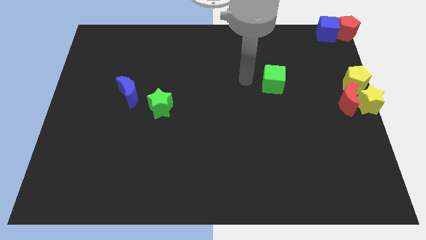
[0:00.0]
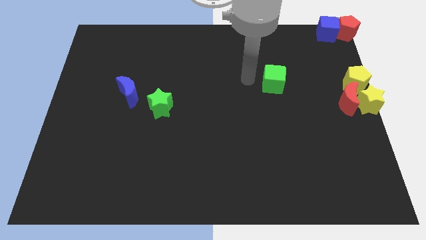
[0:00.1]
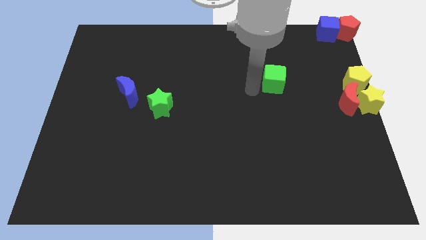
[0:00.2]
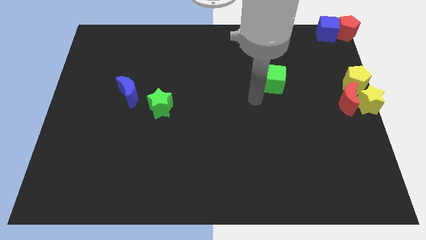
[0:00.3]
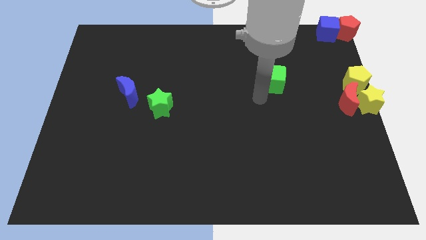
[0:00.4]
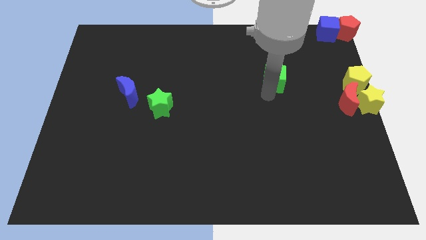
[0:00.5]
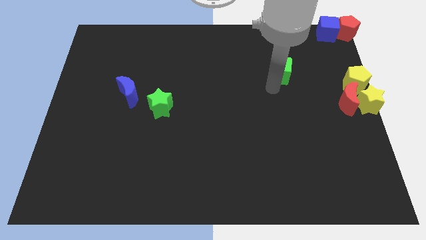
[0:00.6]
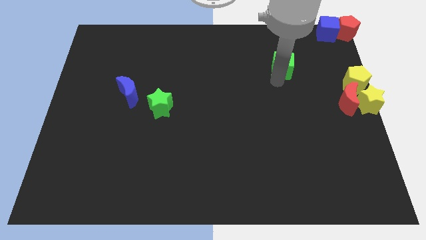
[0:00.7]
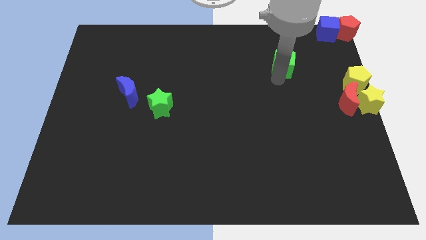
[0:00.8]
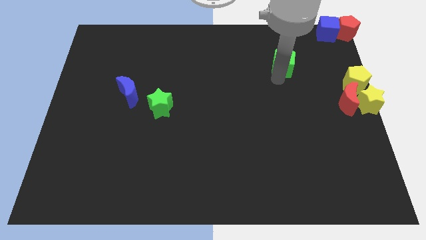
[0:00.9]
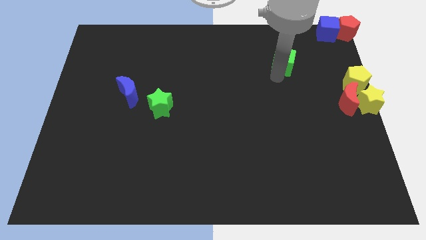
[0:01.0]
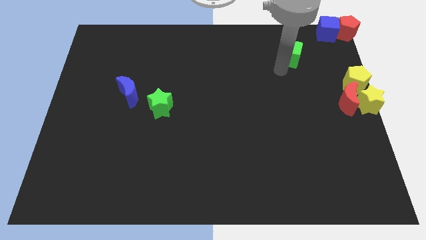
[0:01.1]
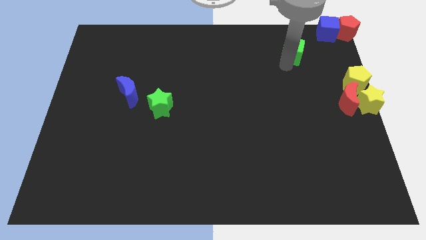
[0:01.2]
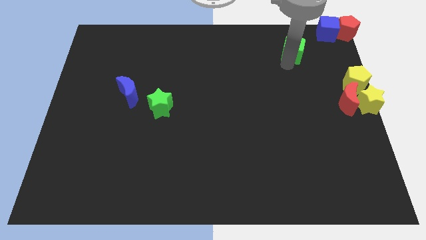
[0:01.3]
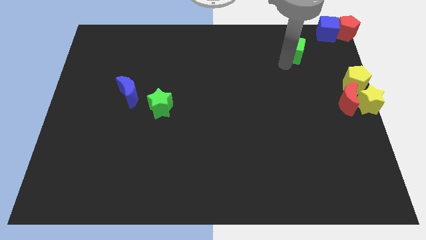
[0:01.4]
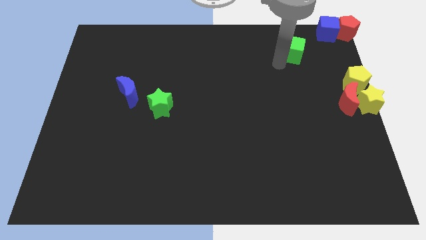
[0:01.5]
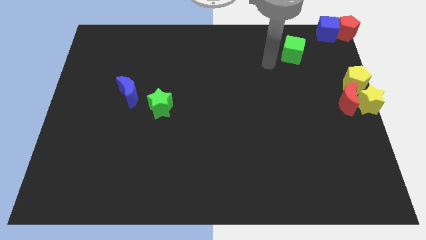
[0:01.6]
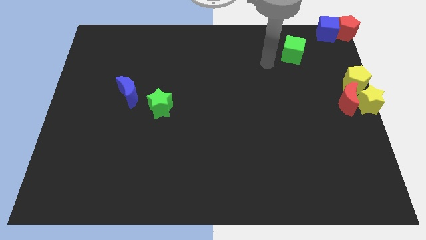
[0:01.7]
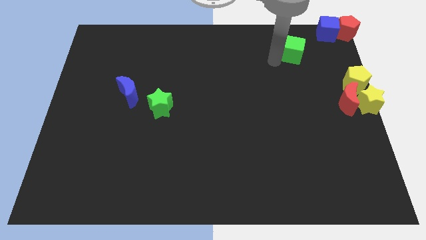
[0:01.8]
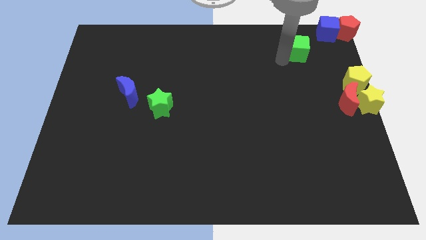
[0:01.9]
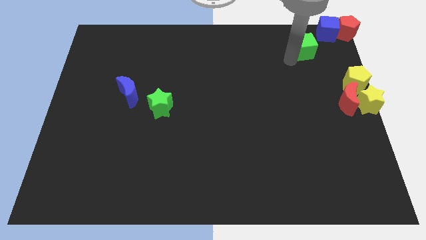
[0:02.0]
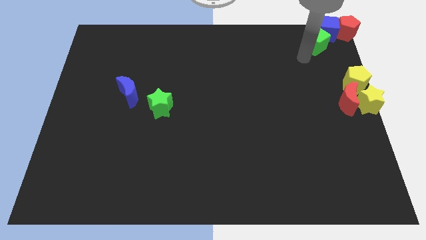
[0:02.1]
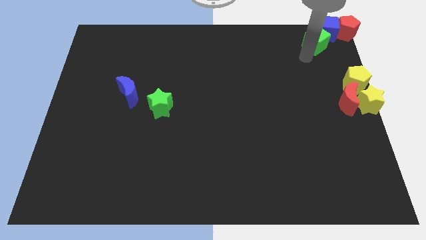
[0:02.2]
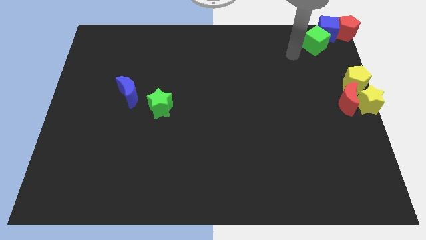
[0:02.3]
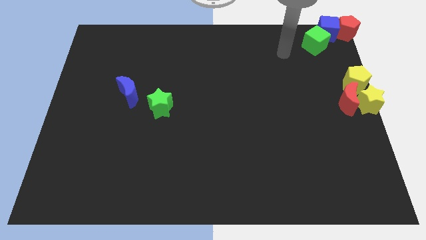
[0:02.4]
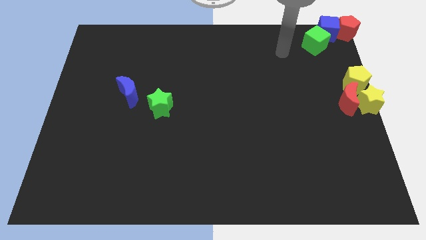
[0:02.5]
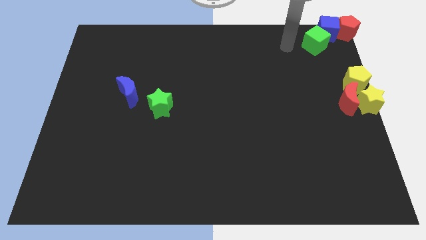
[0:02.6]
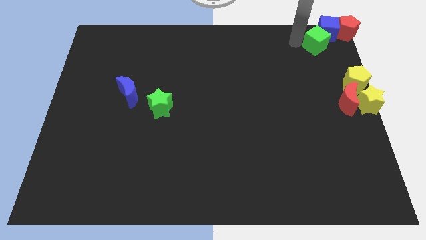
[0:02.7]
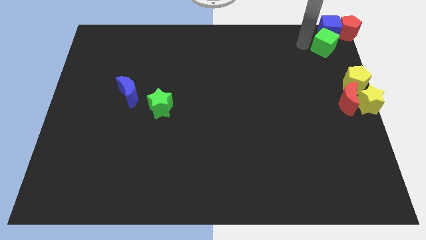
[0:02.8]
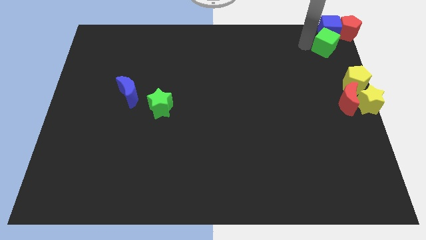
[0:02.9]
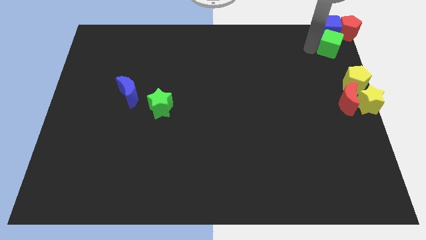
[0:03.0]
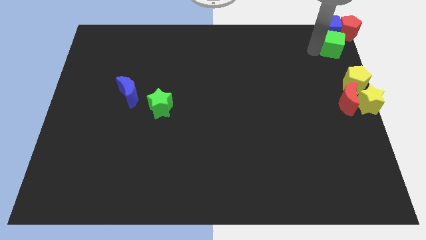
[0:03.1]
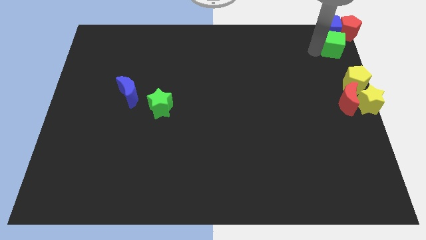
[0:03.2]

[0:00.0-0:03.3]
place the green cube at the bottom of blue cube

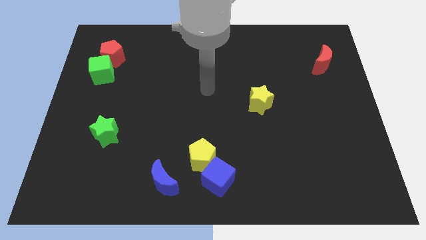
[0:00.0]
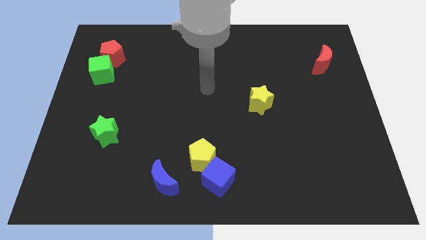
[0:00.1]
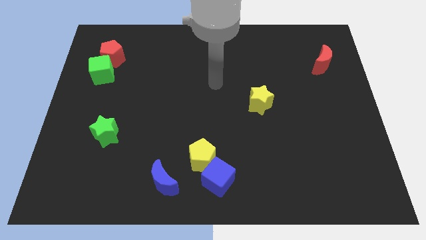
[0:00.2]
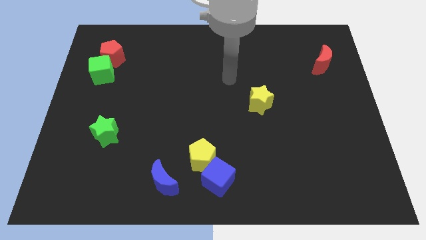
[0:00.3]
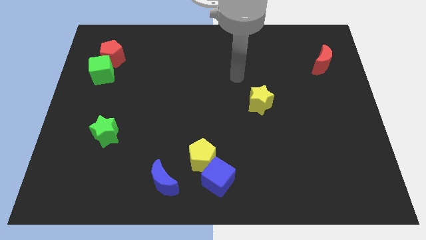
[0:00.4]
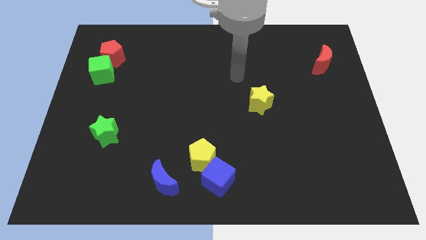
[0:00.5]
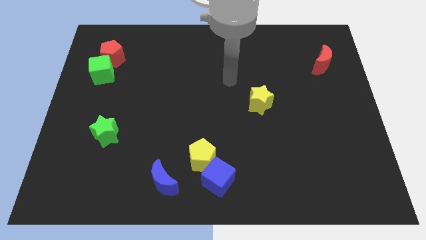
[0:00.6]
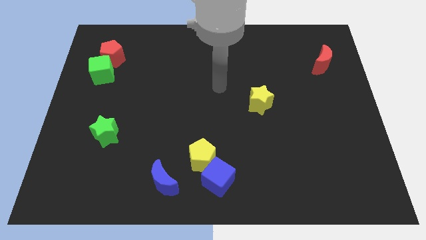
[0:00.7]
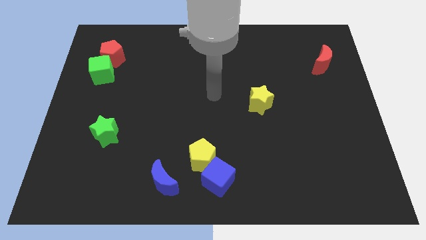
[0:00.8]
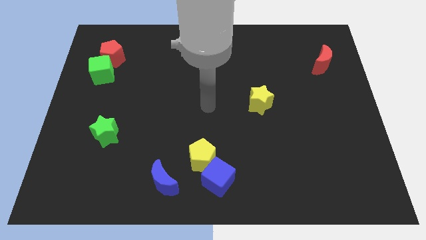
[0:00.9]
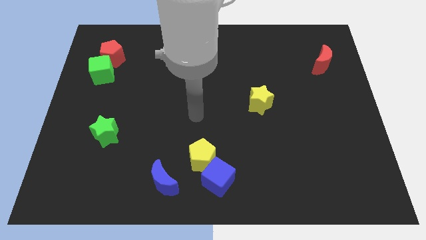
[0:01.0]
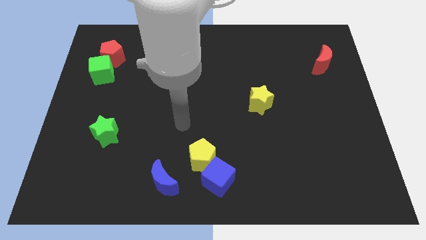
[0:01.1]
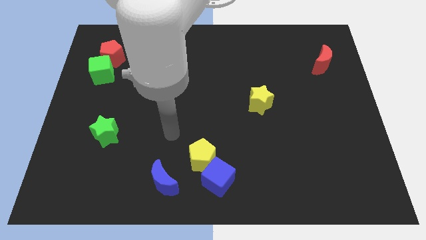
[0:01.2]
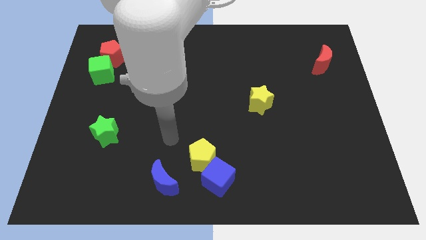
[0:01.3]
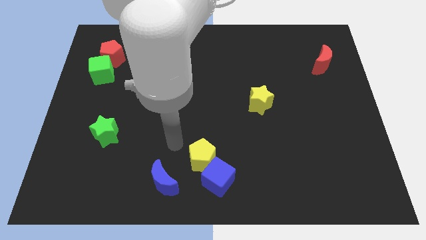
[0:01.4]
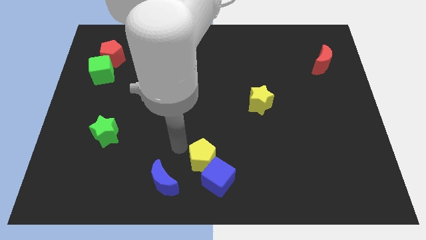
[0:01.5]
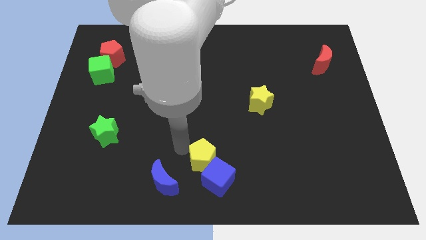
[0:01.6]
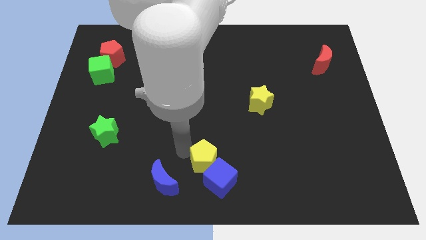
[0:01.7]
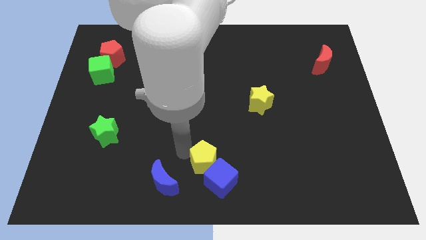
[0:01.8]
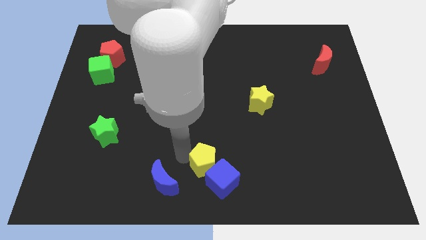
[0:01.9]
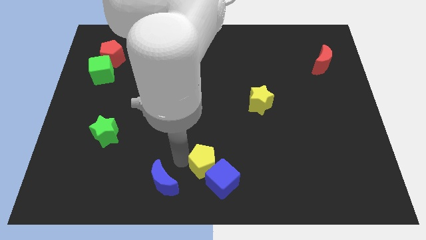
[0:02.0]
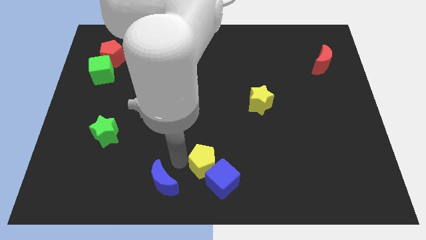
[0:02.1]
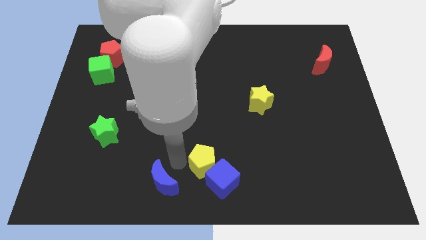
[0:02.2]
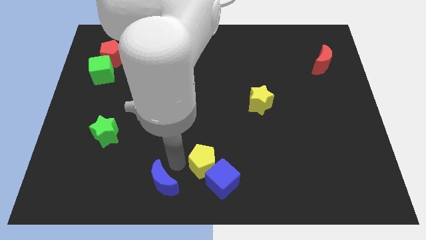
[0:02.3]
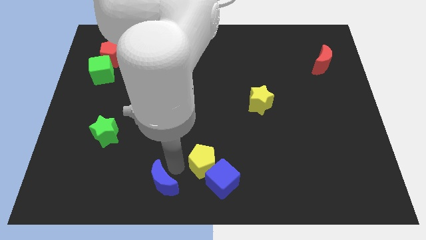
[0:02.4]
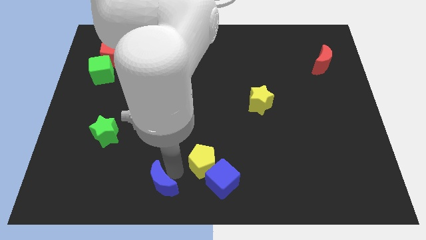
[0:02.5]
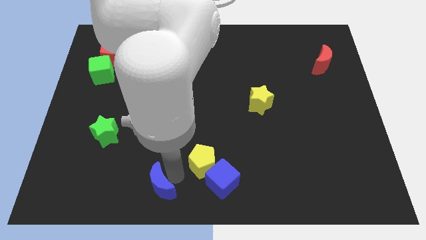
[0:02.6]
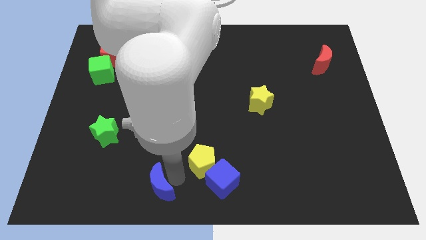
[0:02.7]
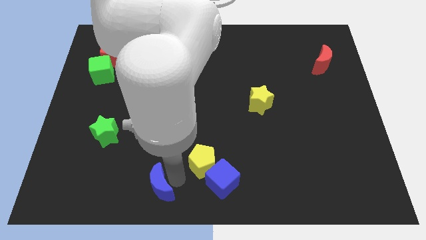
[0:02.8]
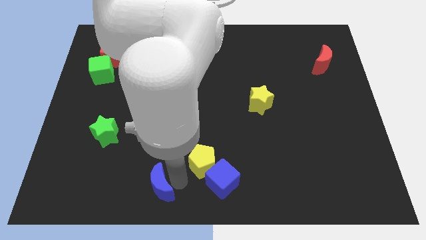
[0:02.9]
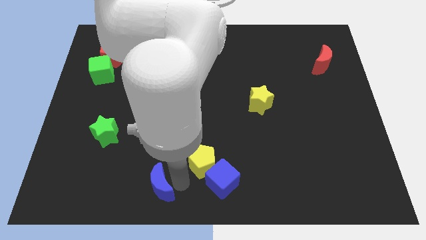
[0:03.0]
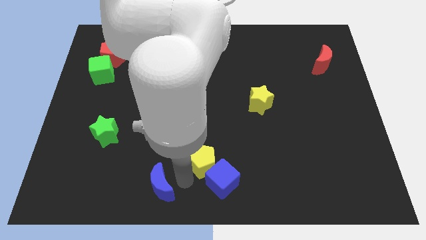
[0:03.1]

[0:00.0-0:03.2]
separate blue moon from yellow pentagon

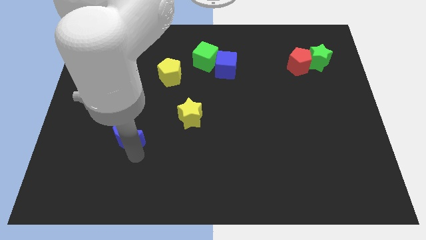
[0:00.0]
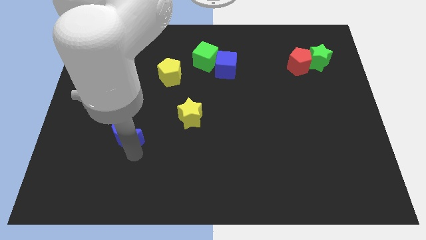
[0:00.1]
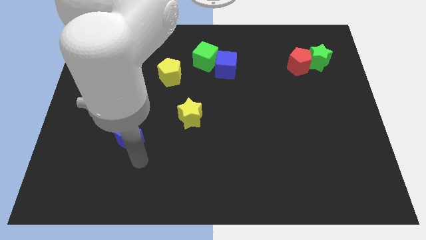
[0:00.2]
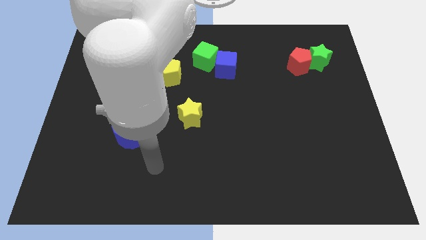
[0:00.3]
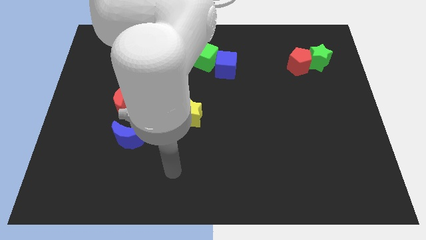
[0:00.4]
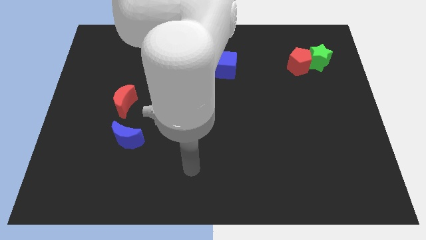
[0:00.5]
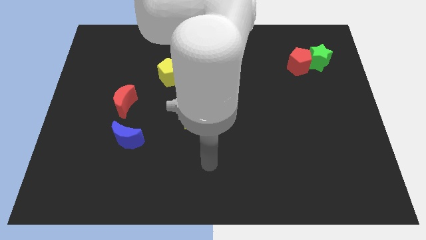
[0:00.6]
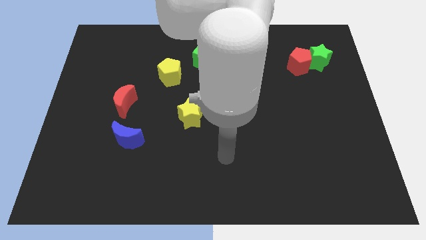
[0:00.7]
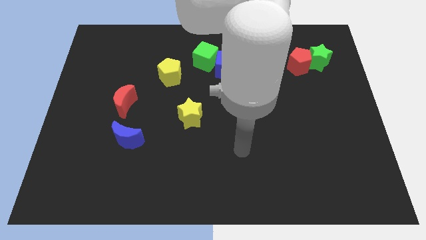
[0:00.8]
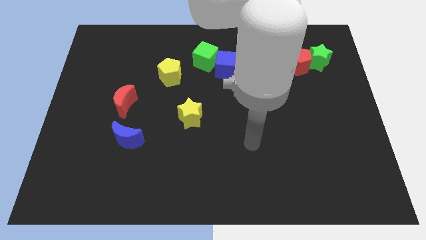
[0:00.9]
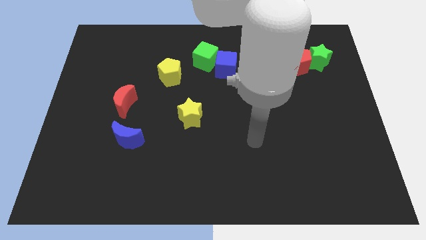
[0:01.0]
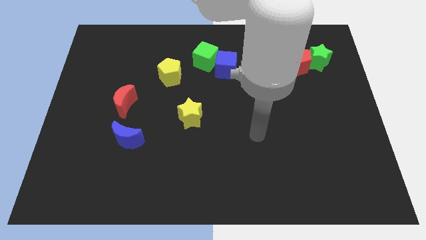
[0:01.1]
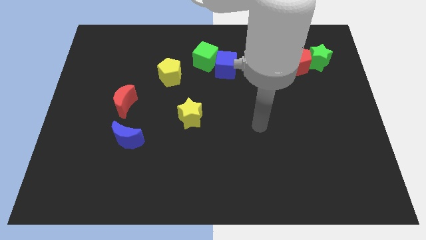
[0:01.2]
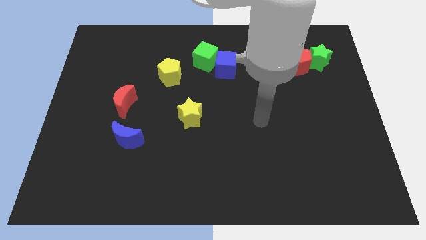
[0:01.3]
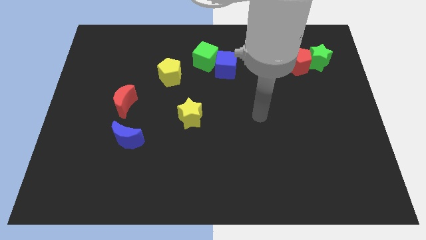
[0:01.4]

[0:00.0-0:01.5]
move arm away from blue moon

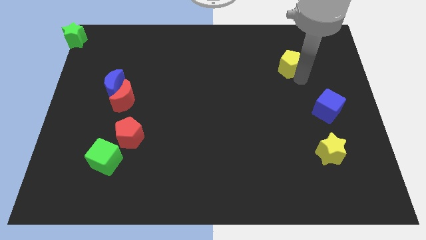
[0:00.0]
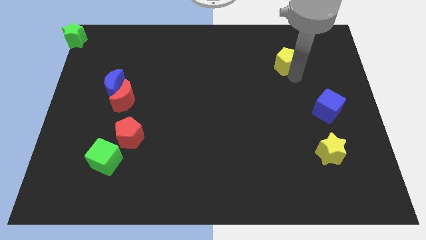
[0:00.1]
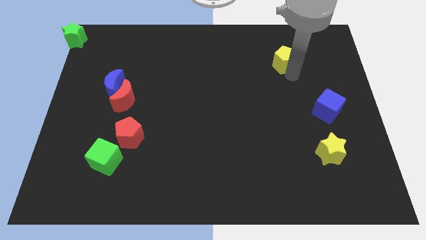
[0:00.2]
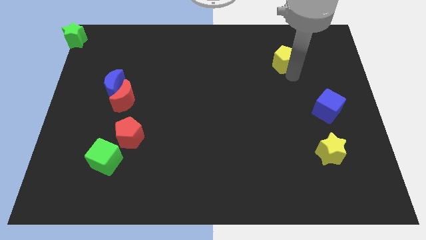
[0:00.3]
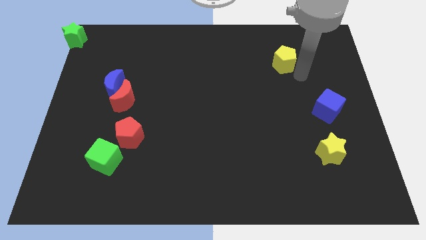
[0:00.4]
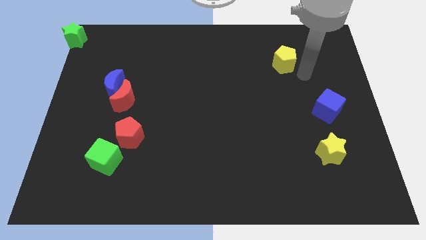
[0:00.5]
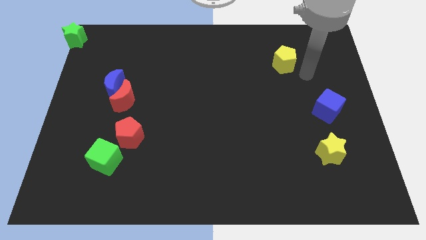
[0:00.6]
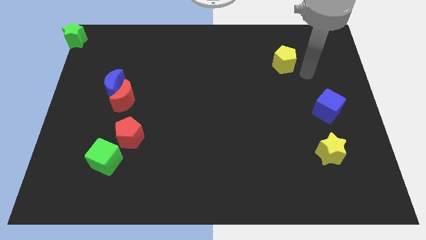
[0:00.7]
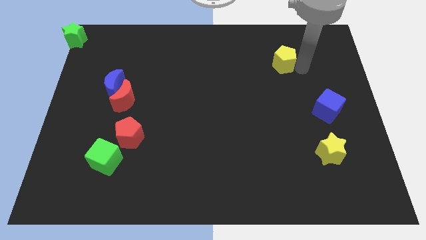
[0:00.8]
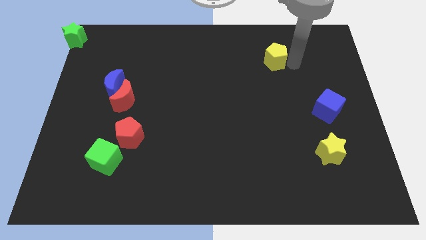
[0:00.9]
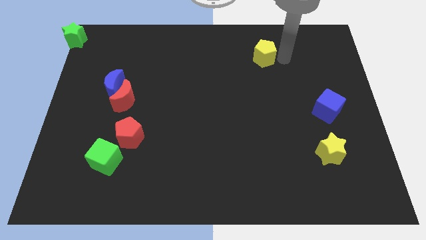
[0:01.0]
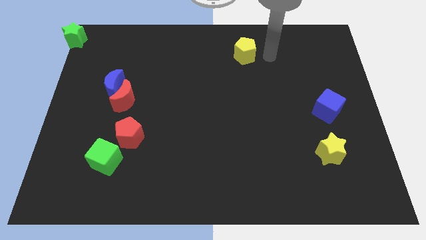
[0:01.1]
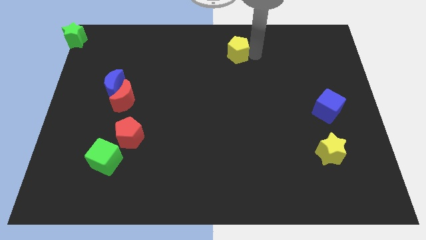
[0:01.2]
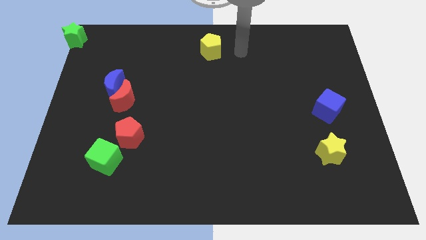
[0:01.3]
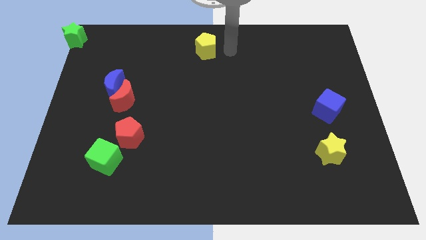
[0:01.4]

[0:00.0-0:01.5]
move the yellow pentagon to the center
